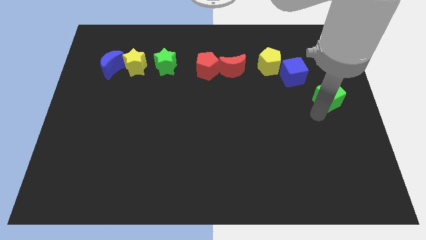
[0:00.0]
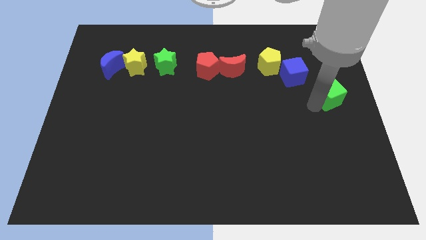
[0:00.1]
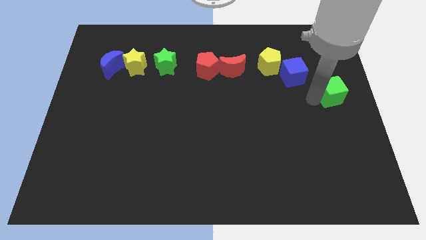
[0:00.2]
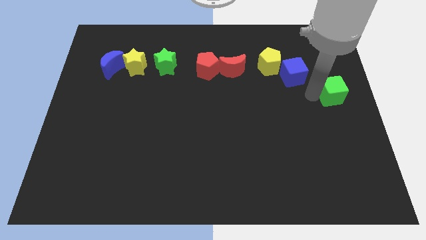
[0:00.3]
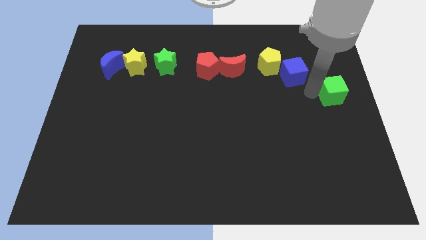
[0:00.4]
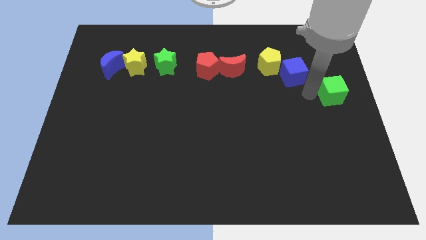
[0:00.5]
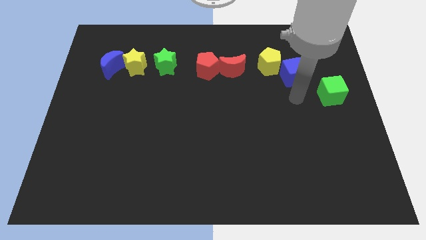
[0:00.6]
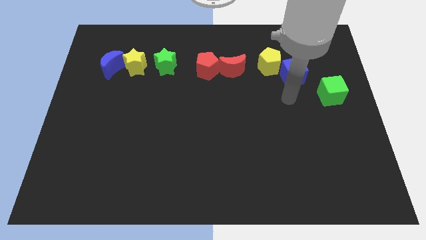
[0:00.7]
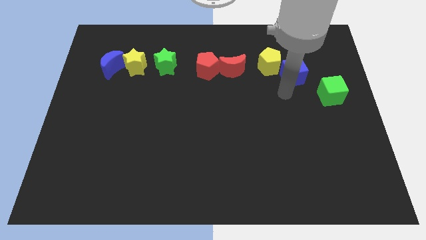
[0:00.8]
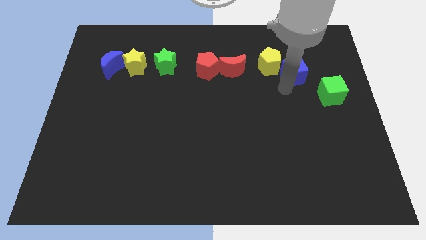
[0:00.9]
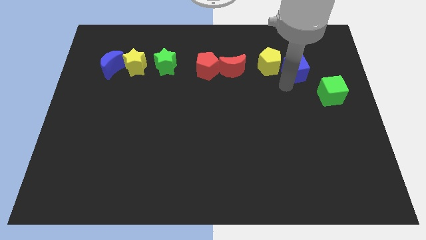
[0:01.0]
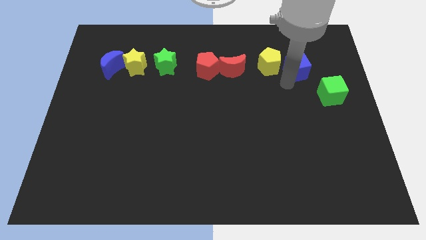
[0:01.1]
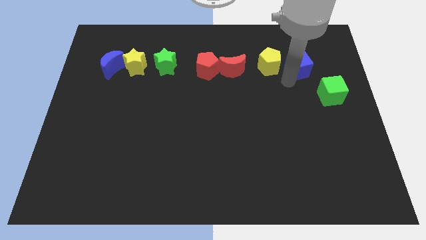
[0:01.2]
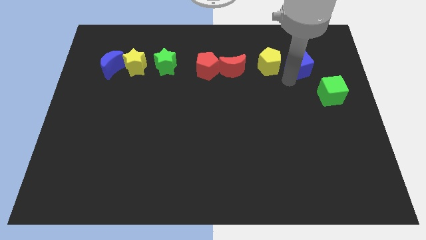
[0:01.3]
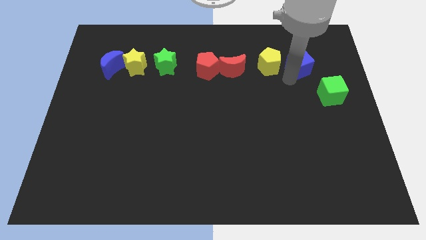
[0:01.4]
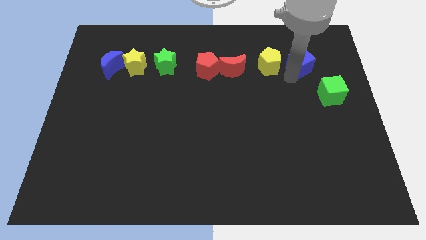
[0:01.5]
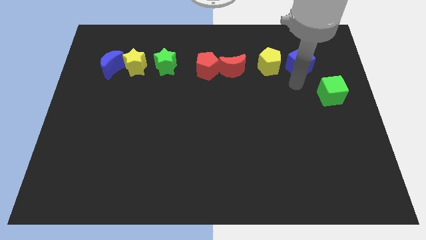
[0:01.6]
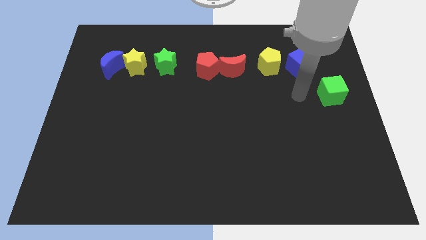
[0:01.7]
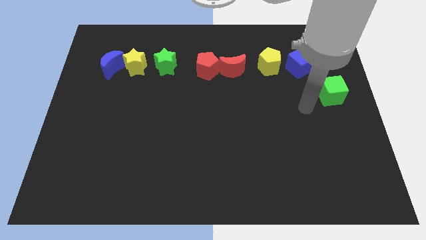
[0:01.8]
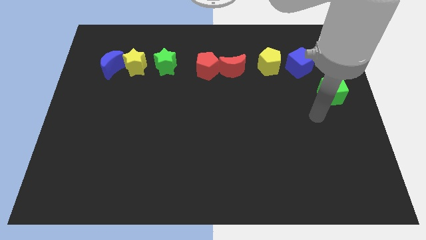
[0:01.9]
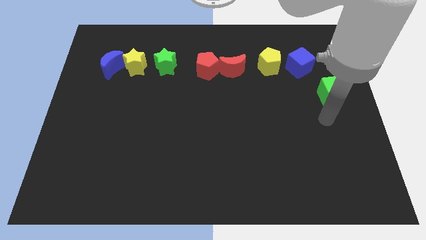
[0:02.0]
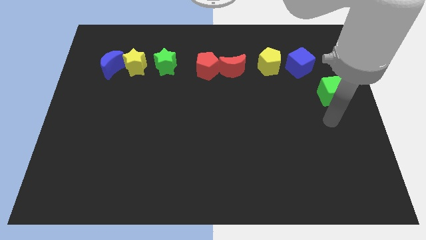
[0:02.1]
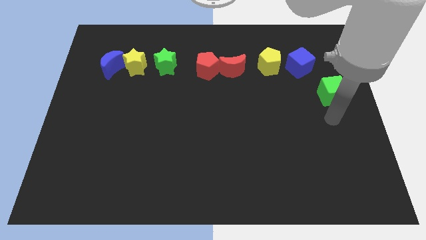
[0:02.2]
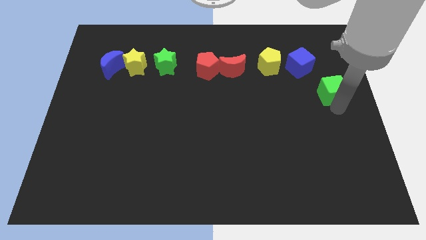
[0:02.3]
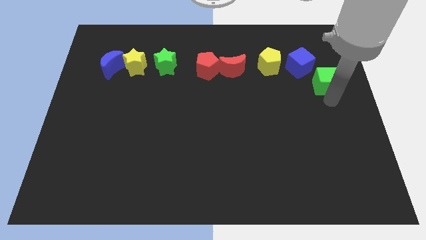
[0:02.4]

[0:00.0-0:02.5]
place your arm below the green cube

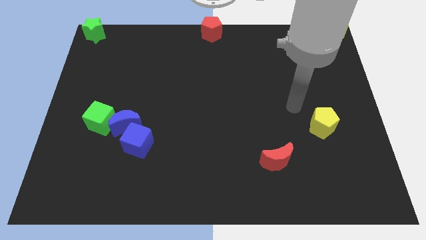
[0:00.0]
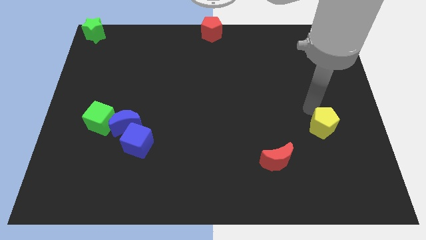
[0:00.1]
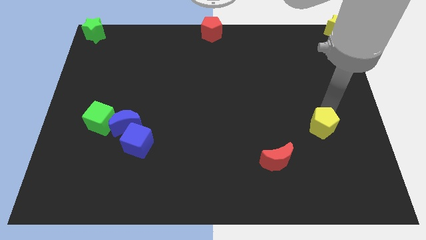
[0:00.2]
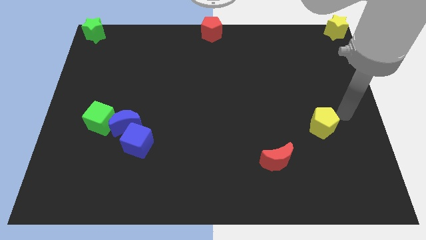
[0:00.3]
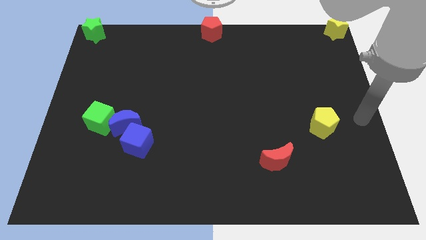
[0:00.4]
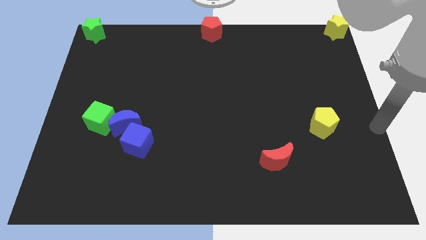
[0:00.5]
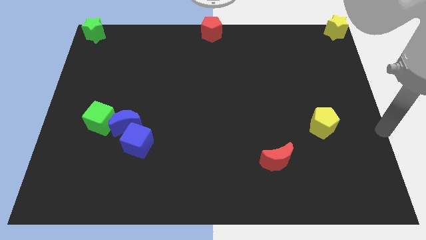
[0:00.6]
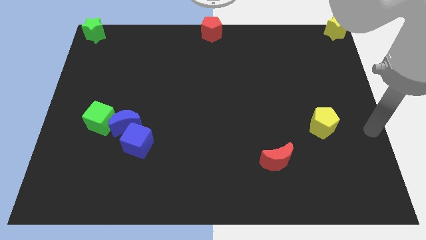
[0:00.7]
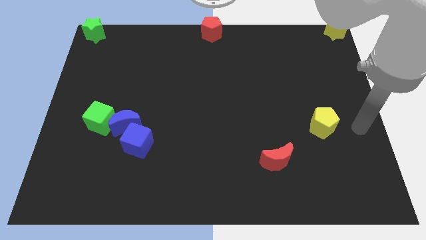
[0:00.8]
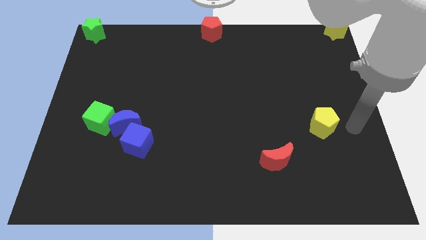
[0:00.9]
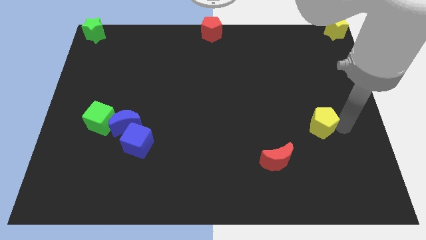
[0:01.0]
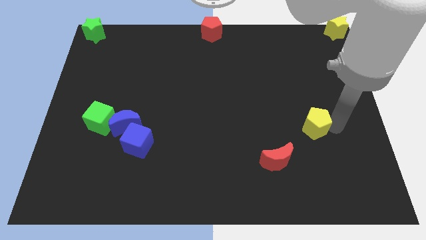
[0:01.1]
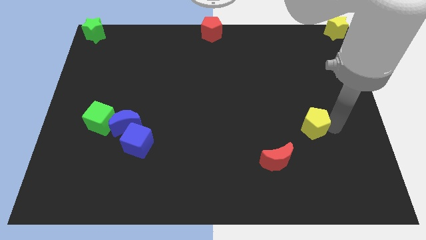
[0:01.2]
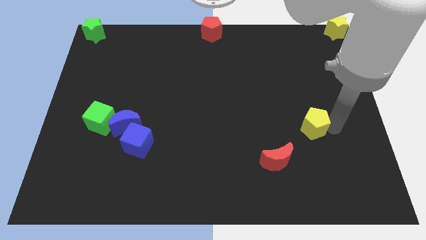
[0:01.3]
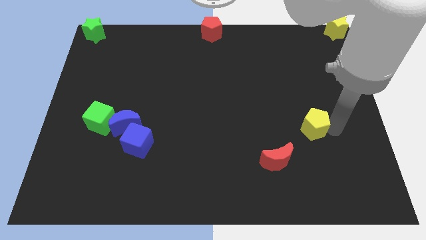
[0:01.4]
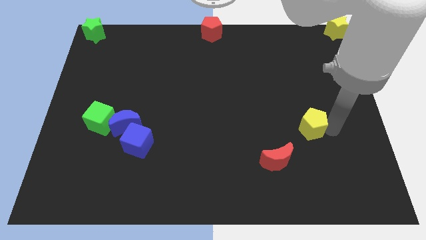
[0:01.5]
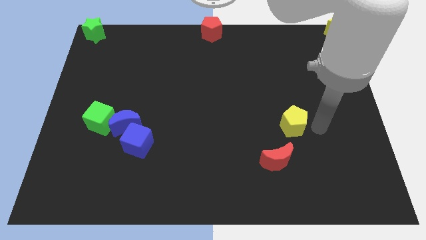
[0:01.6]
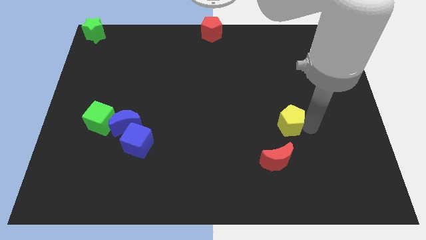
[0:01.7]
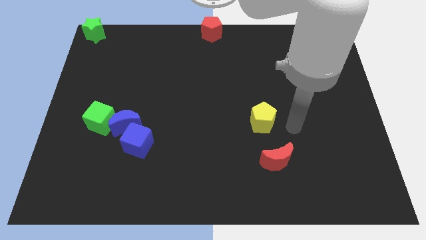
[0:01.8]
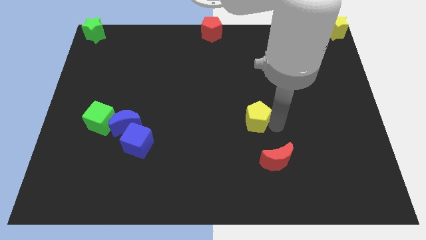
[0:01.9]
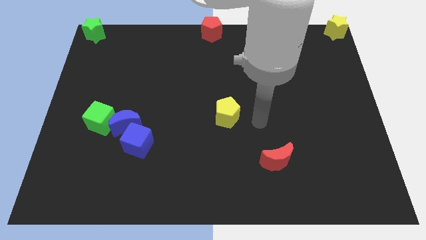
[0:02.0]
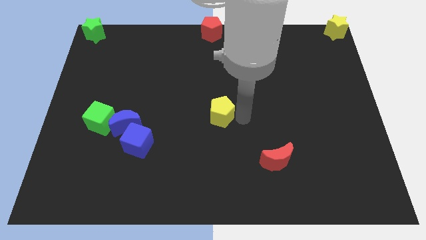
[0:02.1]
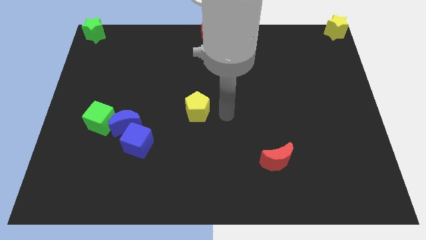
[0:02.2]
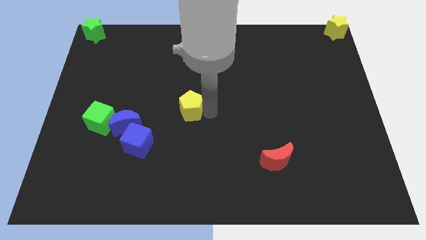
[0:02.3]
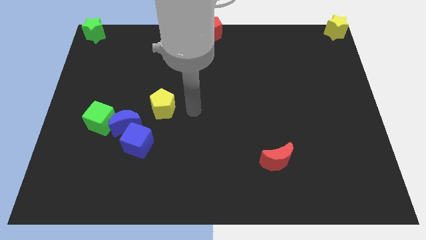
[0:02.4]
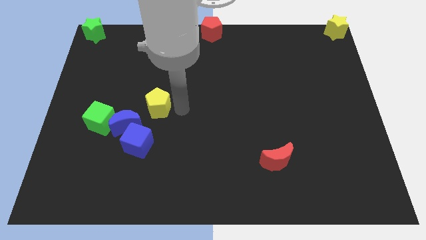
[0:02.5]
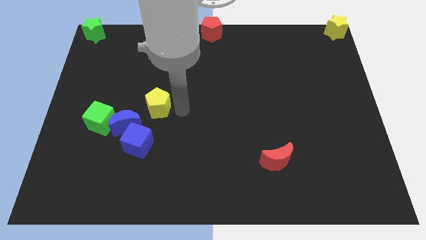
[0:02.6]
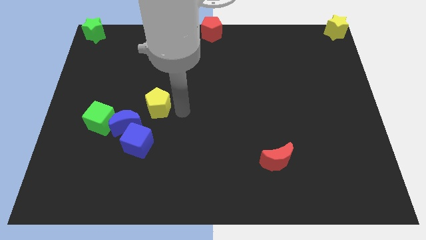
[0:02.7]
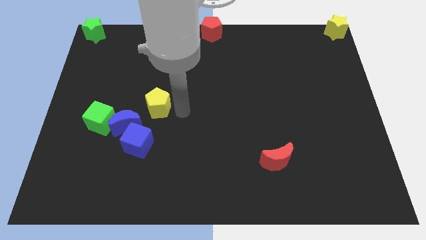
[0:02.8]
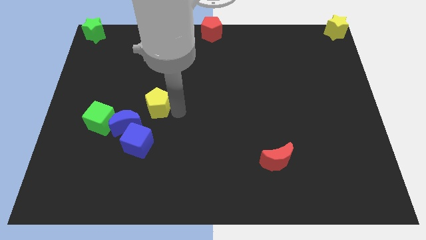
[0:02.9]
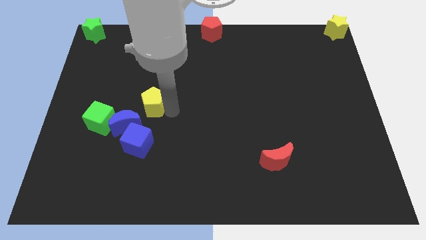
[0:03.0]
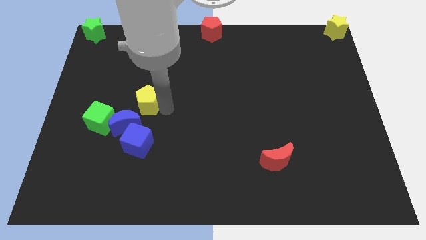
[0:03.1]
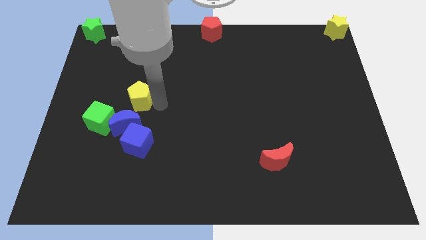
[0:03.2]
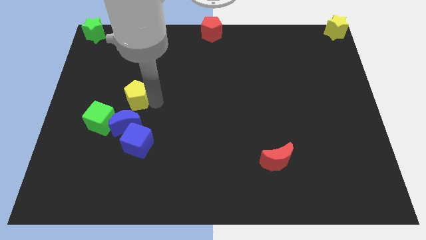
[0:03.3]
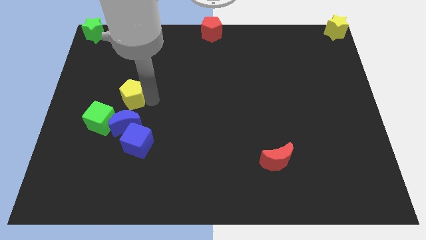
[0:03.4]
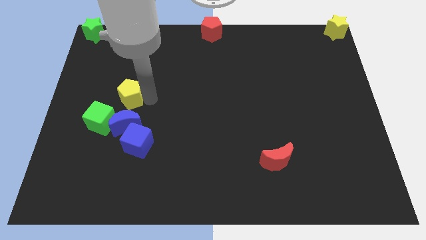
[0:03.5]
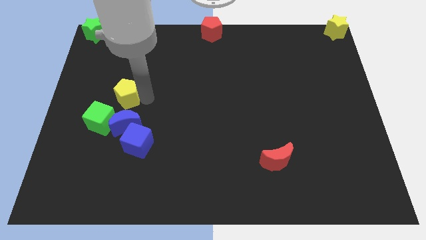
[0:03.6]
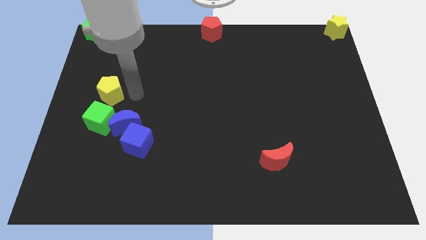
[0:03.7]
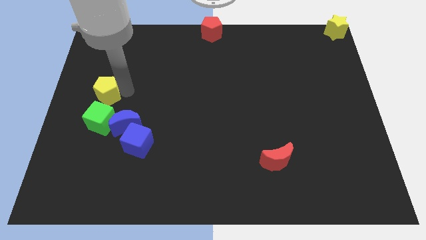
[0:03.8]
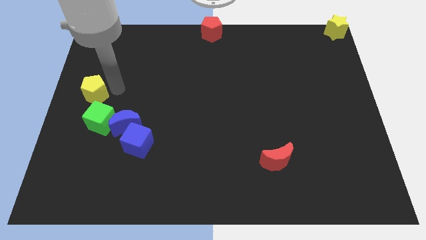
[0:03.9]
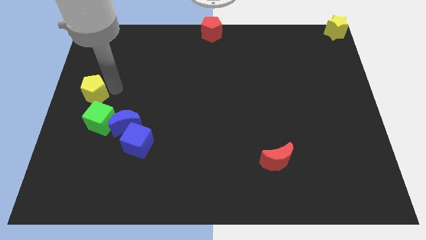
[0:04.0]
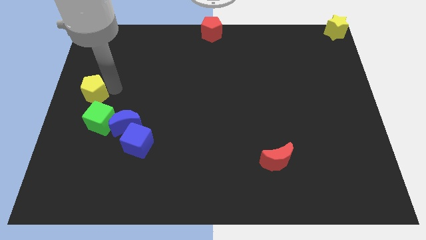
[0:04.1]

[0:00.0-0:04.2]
move the yellow pentagon above the green cube

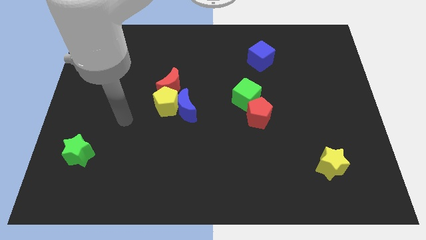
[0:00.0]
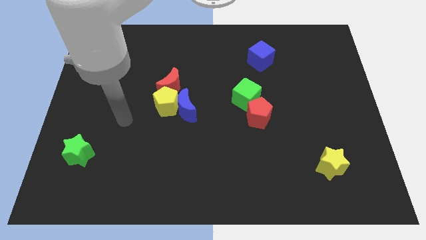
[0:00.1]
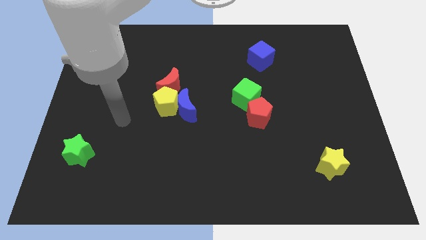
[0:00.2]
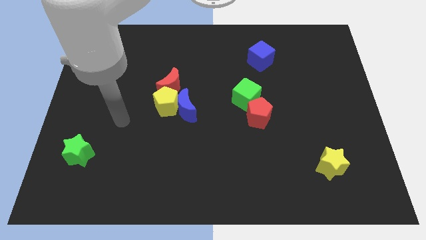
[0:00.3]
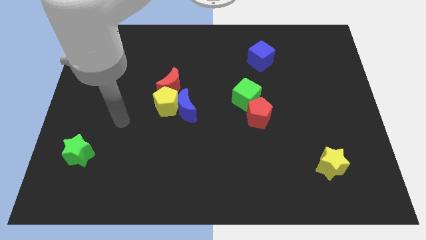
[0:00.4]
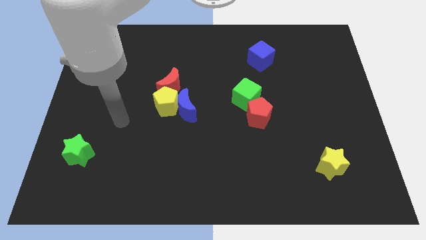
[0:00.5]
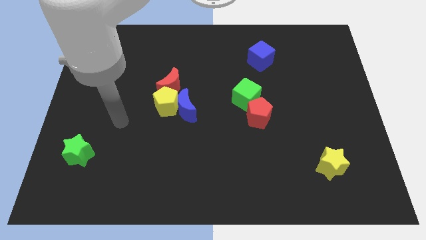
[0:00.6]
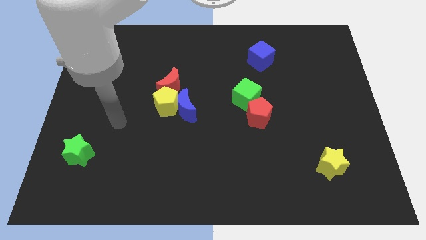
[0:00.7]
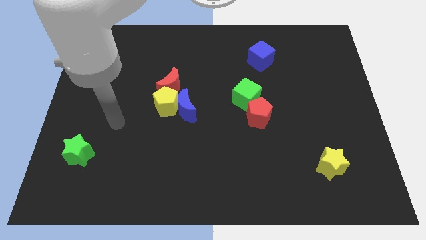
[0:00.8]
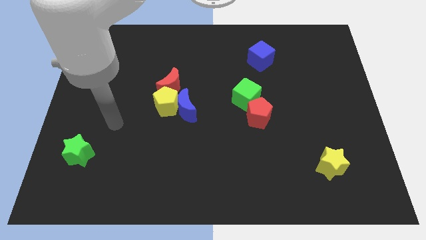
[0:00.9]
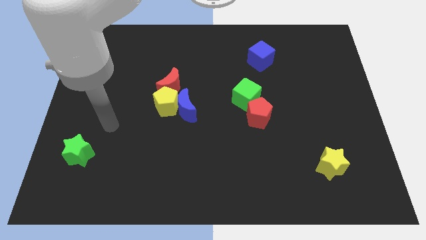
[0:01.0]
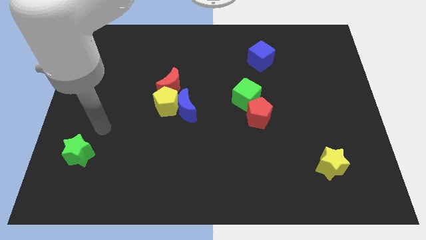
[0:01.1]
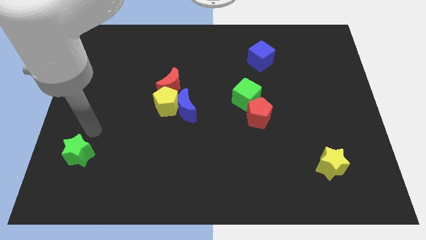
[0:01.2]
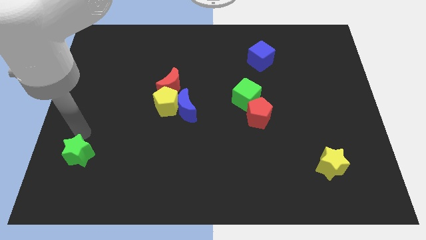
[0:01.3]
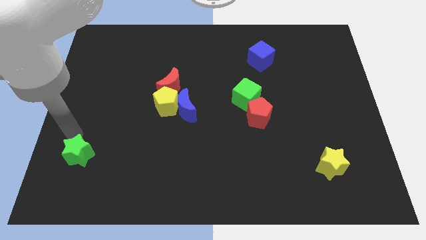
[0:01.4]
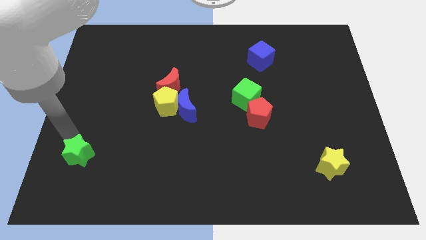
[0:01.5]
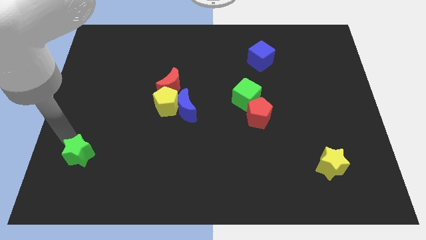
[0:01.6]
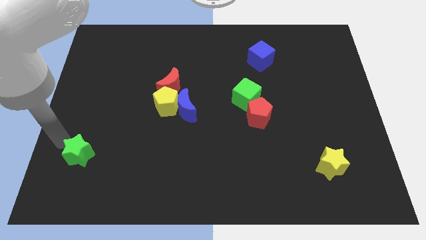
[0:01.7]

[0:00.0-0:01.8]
point your arm above yellow star

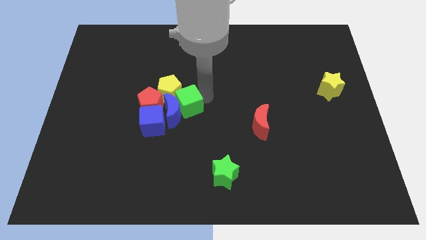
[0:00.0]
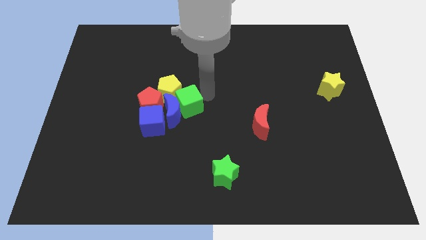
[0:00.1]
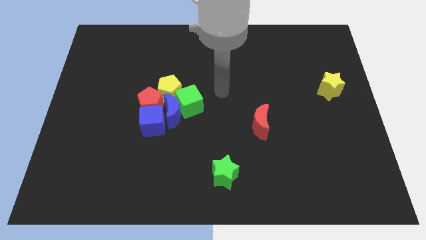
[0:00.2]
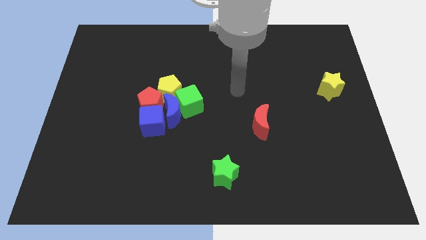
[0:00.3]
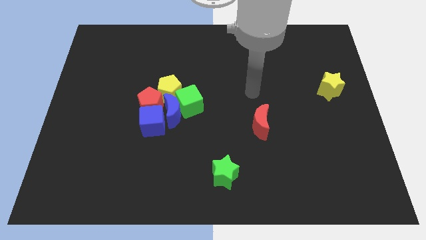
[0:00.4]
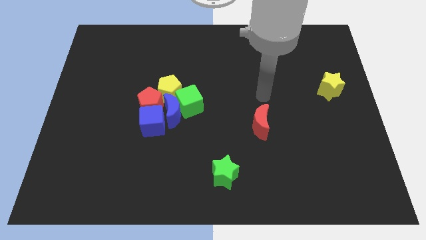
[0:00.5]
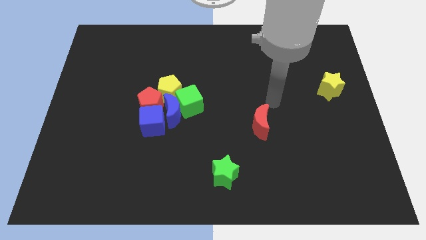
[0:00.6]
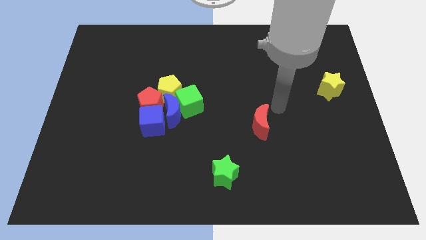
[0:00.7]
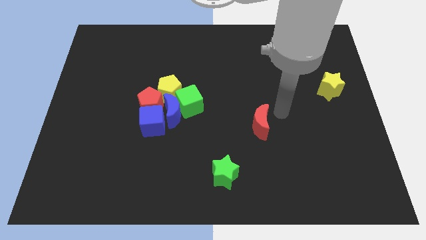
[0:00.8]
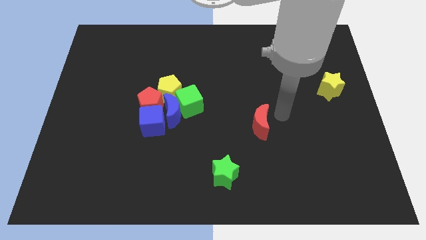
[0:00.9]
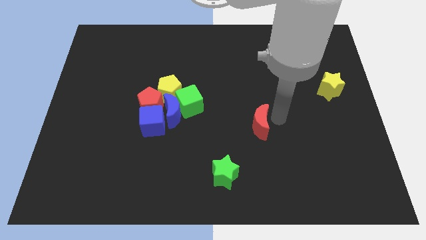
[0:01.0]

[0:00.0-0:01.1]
point your arm at the right of the red crescent
